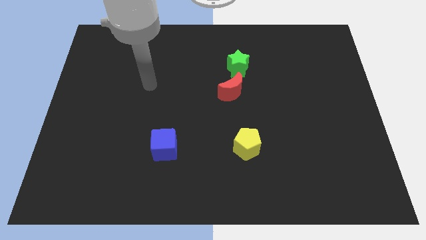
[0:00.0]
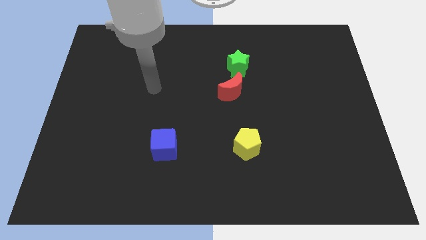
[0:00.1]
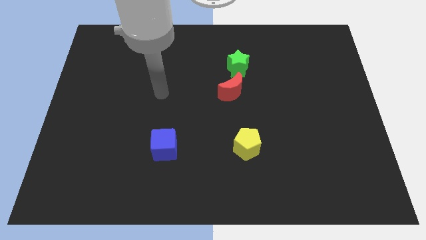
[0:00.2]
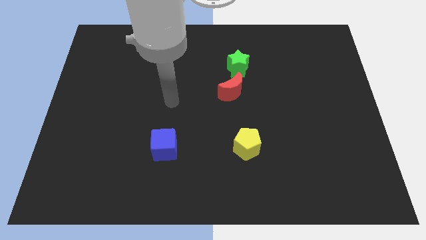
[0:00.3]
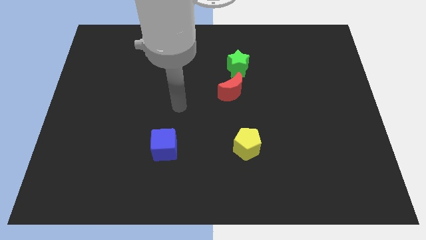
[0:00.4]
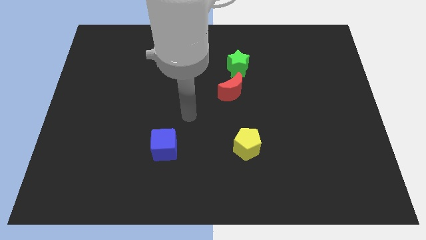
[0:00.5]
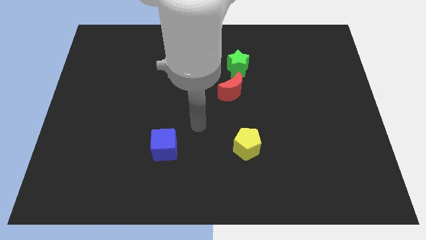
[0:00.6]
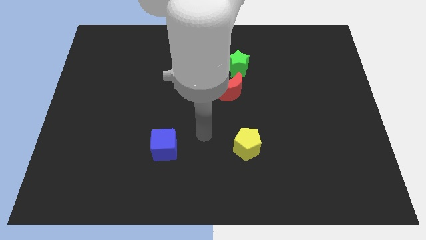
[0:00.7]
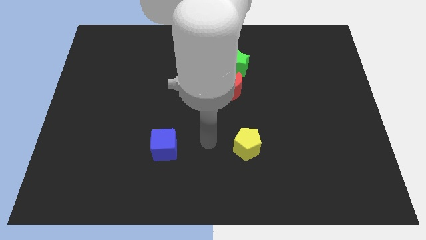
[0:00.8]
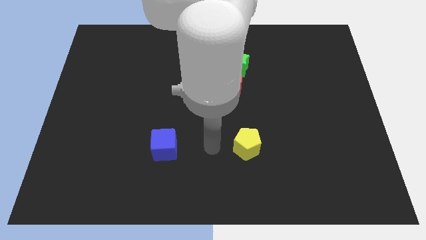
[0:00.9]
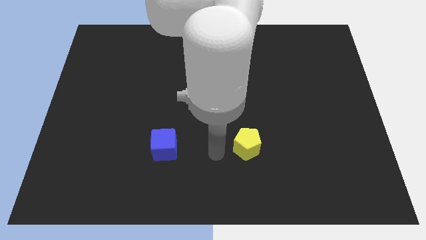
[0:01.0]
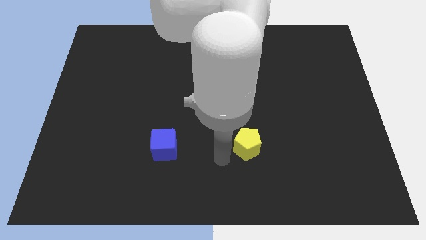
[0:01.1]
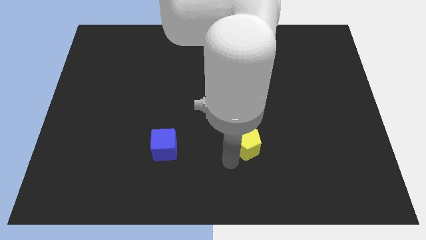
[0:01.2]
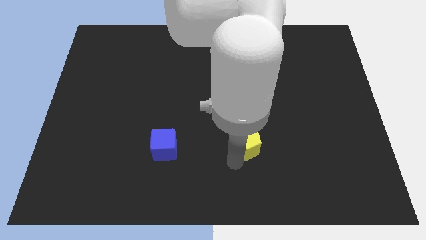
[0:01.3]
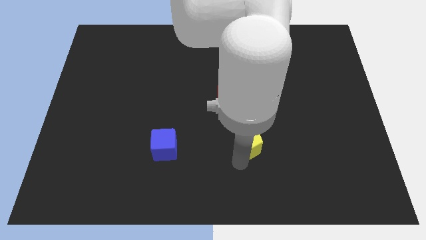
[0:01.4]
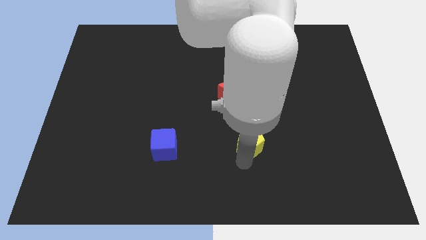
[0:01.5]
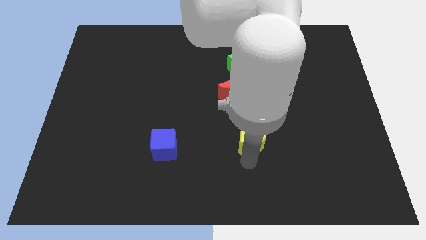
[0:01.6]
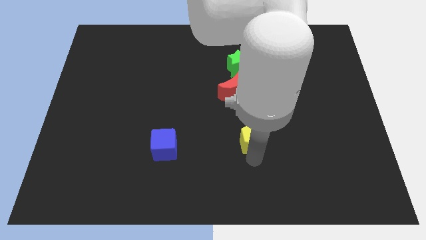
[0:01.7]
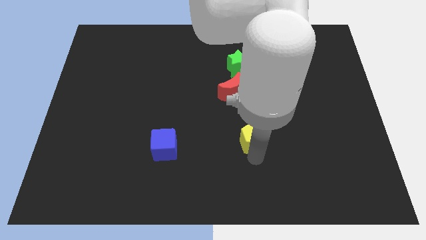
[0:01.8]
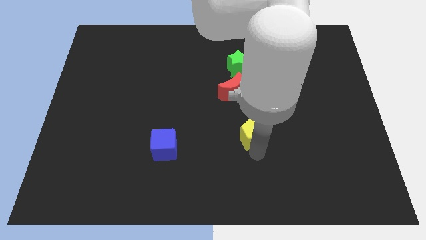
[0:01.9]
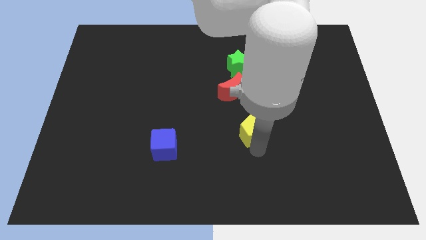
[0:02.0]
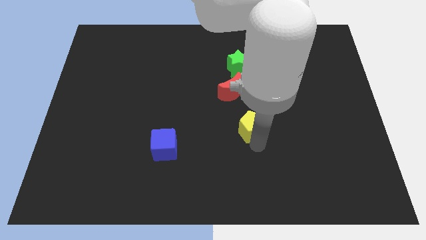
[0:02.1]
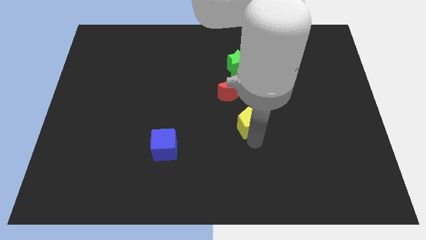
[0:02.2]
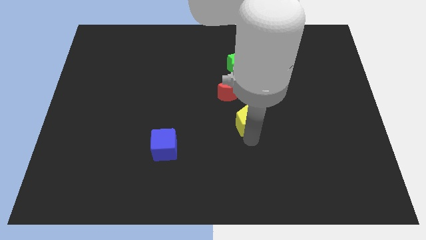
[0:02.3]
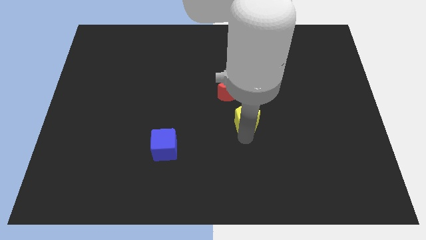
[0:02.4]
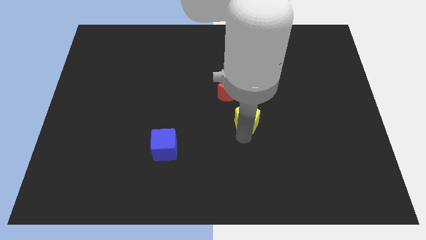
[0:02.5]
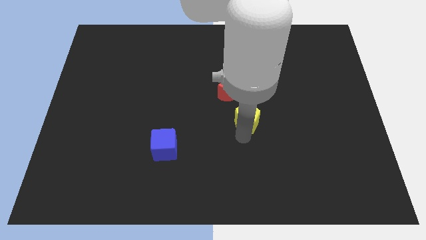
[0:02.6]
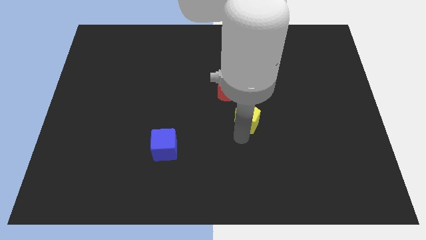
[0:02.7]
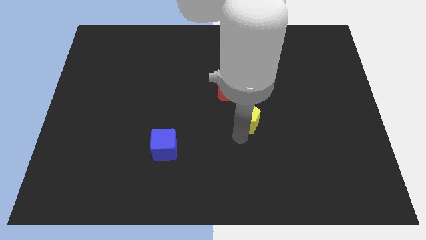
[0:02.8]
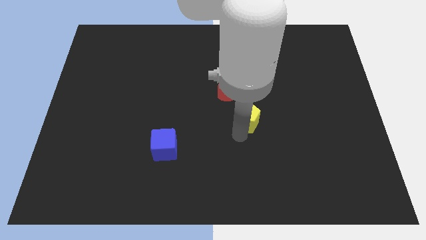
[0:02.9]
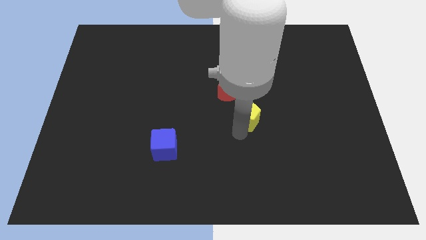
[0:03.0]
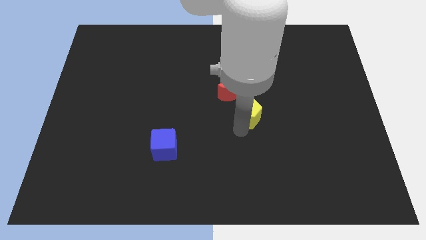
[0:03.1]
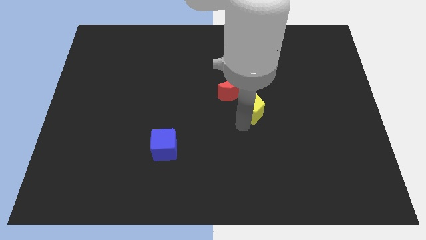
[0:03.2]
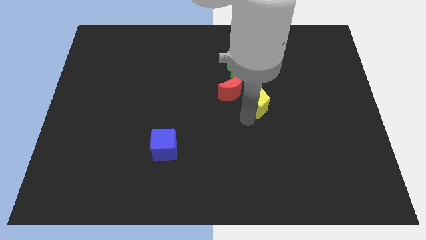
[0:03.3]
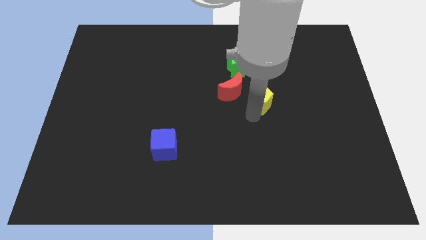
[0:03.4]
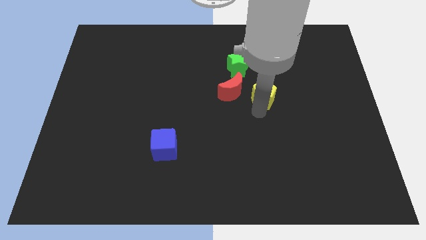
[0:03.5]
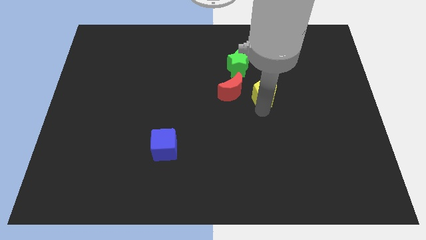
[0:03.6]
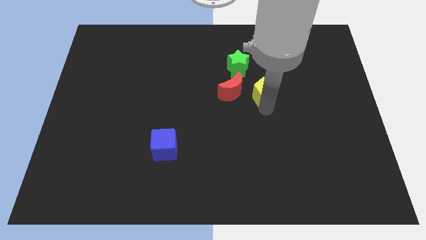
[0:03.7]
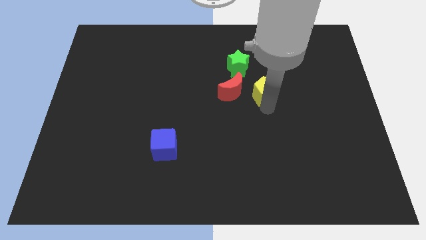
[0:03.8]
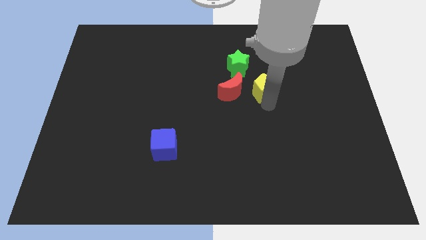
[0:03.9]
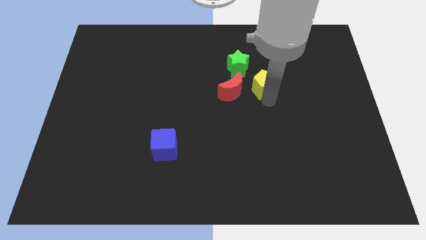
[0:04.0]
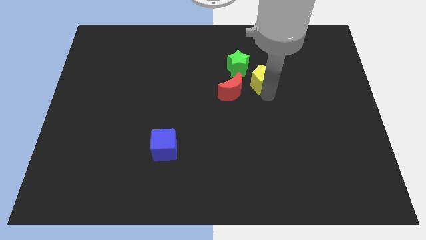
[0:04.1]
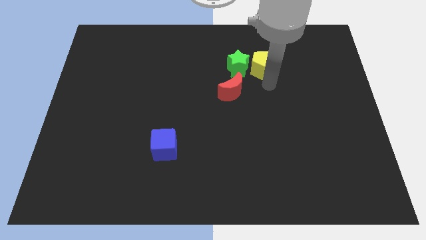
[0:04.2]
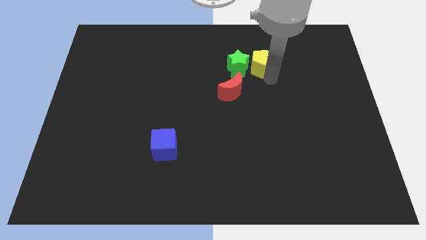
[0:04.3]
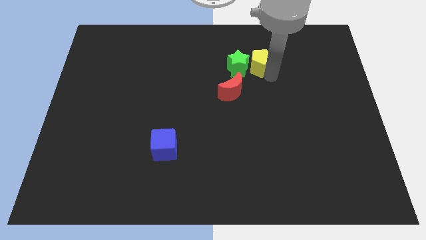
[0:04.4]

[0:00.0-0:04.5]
move the yellow pentagon close to the green star

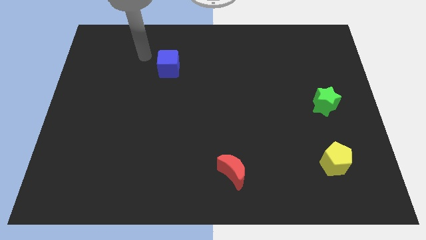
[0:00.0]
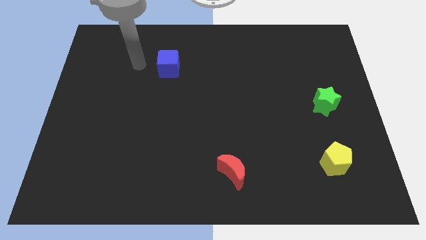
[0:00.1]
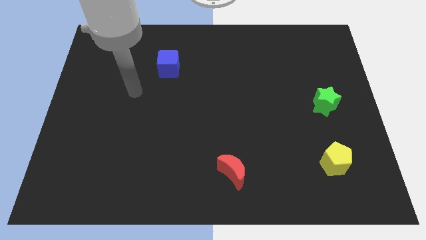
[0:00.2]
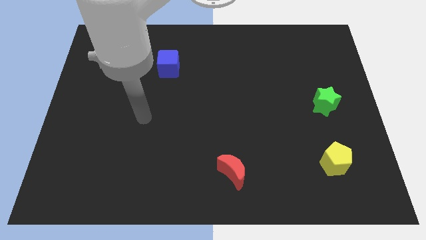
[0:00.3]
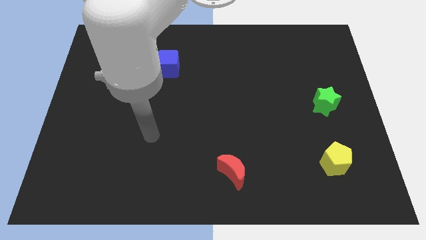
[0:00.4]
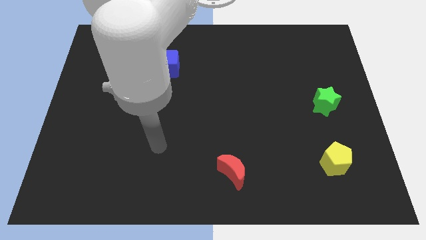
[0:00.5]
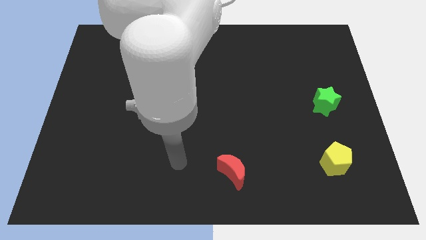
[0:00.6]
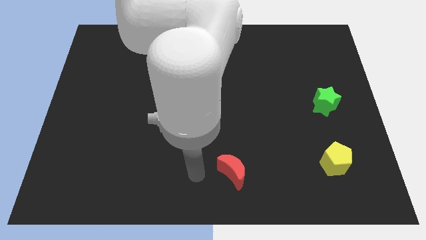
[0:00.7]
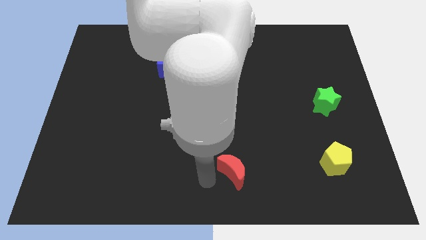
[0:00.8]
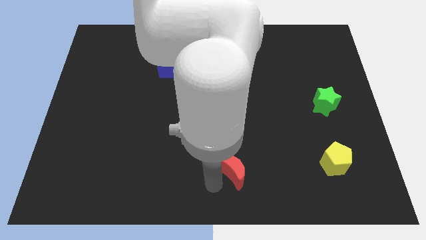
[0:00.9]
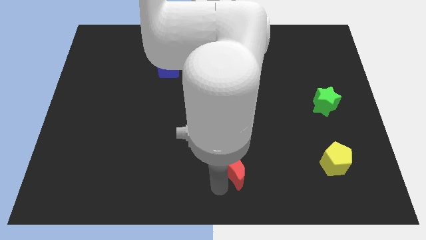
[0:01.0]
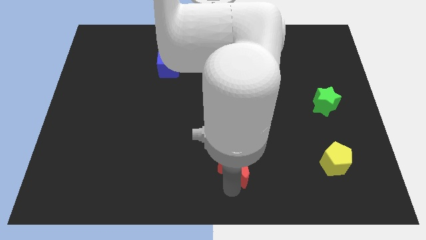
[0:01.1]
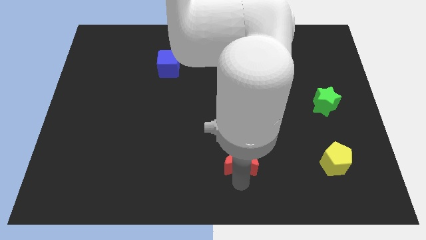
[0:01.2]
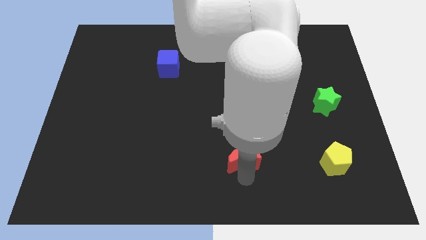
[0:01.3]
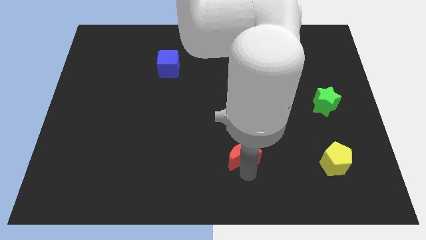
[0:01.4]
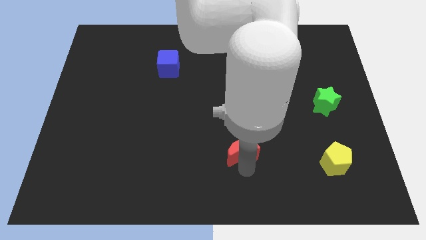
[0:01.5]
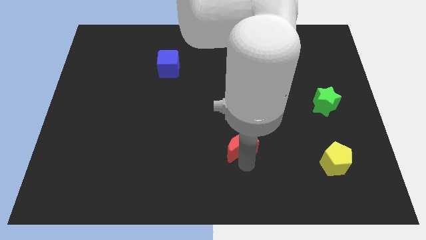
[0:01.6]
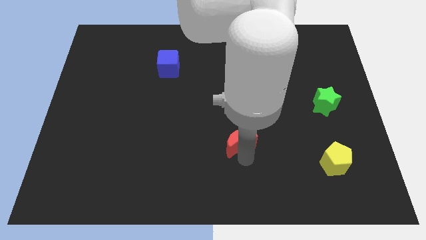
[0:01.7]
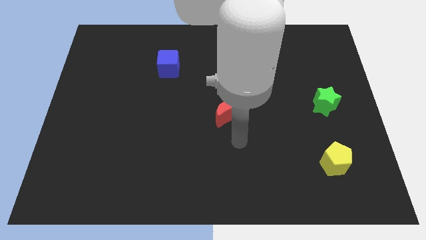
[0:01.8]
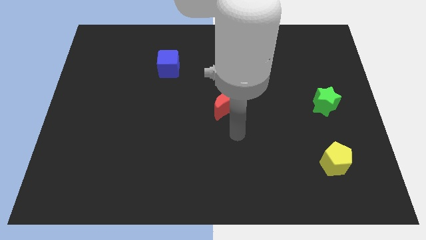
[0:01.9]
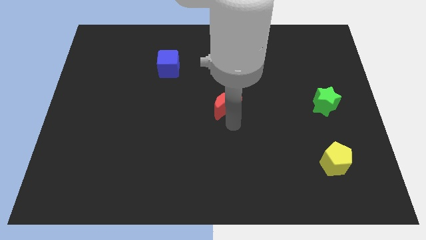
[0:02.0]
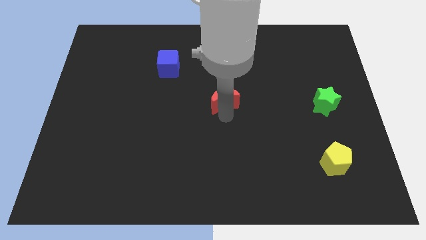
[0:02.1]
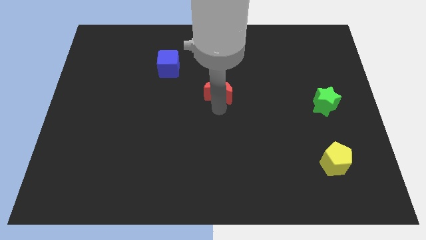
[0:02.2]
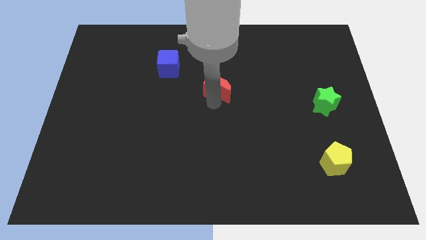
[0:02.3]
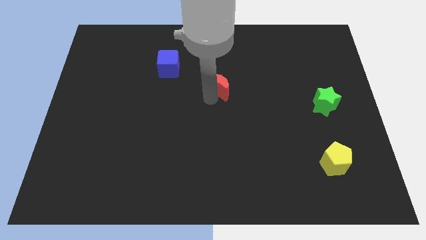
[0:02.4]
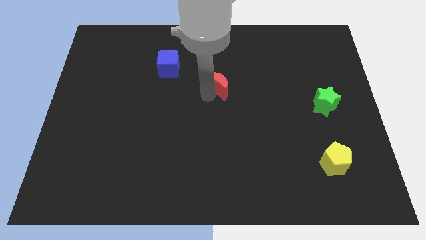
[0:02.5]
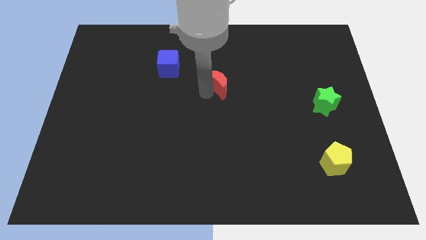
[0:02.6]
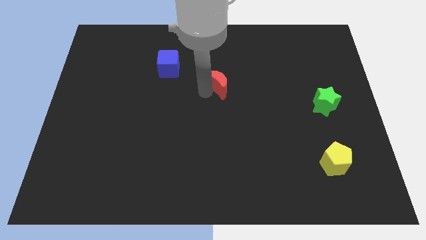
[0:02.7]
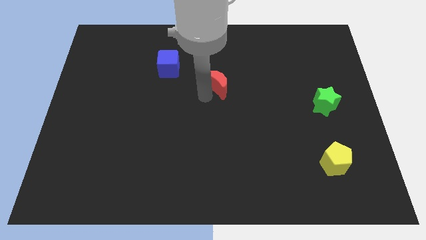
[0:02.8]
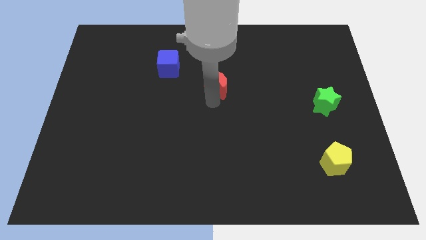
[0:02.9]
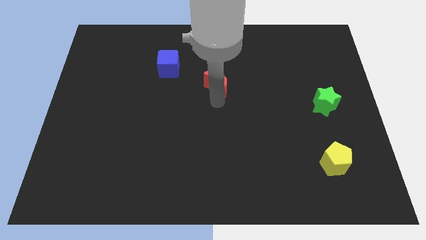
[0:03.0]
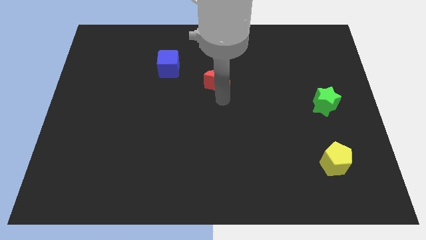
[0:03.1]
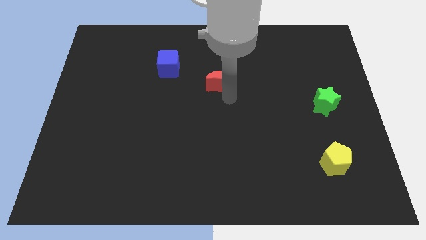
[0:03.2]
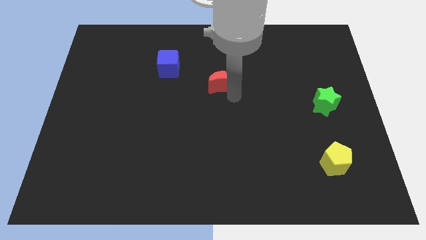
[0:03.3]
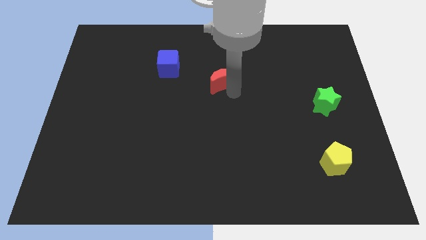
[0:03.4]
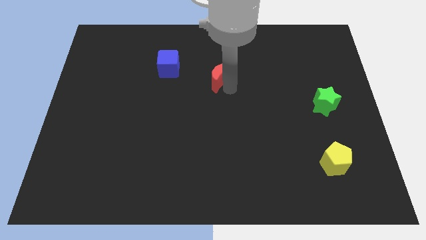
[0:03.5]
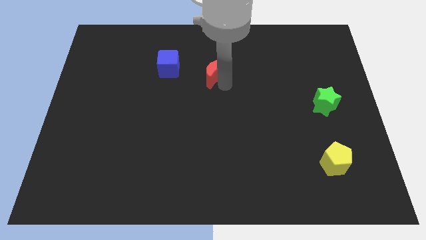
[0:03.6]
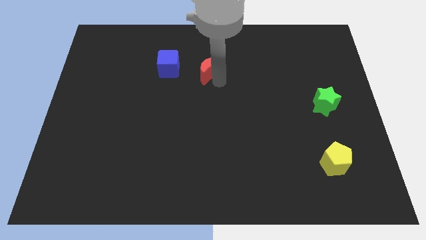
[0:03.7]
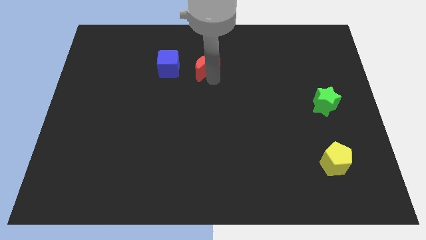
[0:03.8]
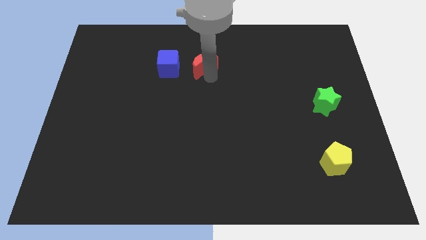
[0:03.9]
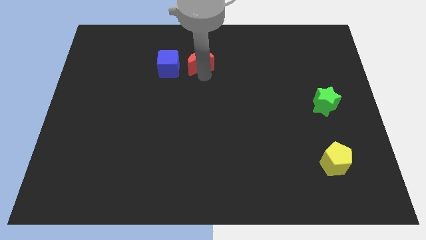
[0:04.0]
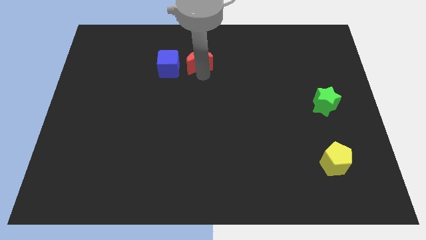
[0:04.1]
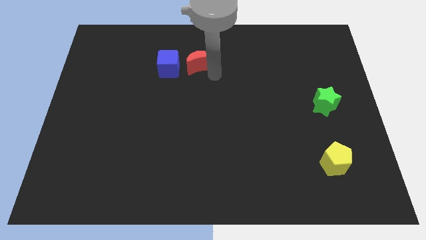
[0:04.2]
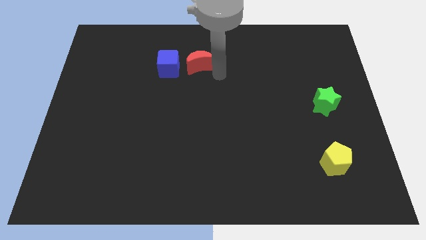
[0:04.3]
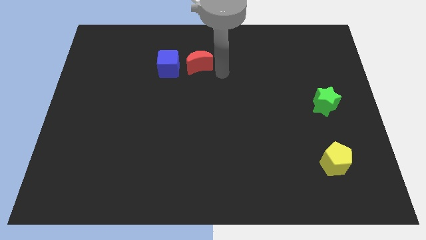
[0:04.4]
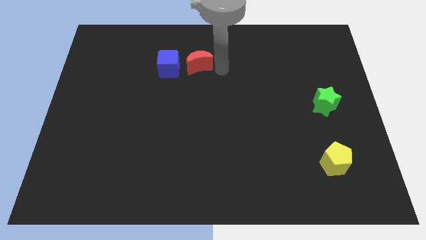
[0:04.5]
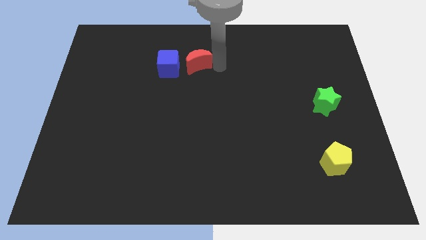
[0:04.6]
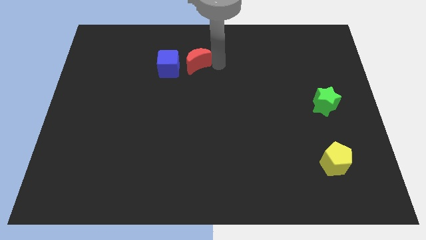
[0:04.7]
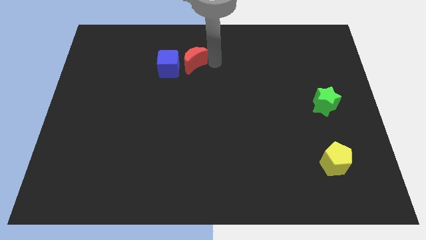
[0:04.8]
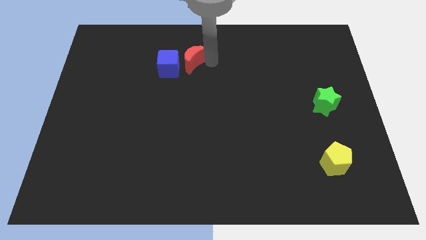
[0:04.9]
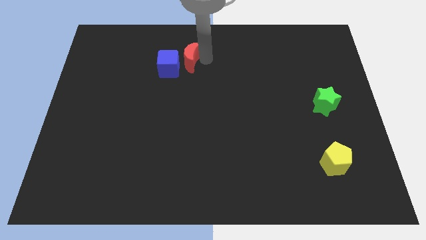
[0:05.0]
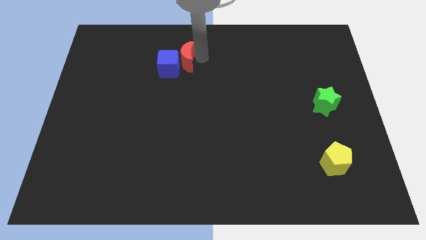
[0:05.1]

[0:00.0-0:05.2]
put the moon close to the blue block
